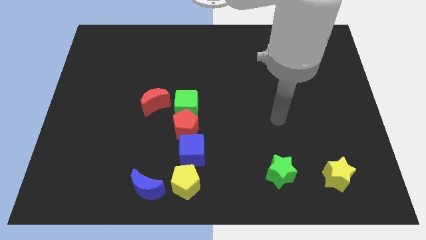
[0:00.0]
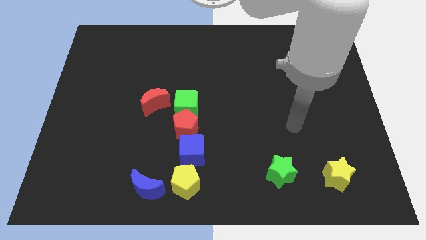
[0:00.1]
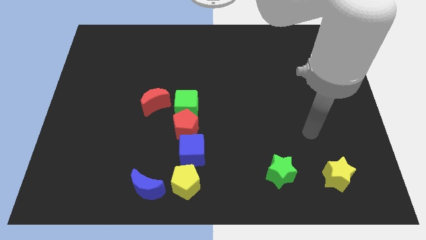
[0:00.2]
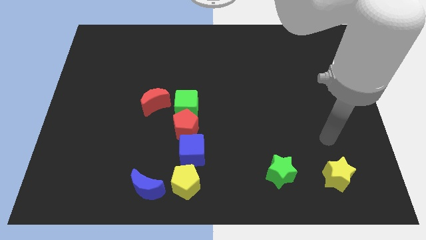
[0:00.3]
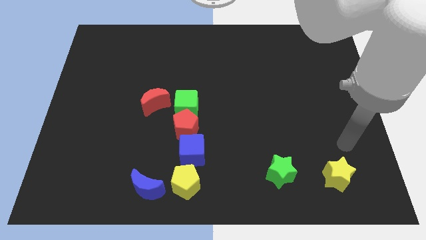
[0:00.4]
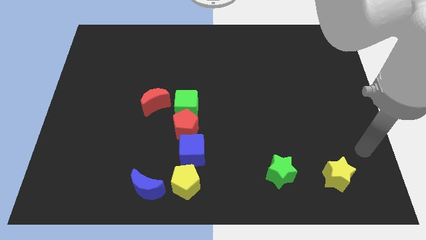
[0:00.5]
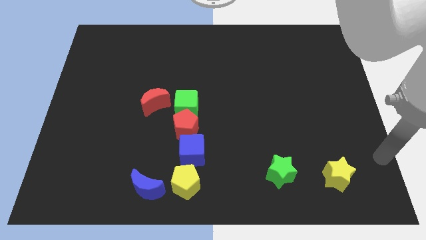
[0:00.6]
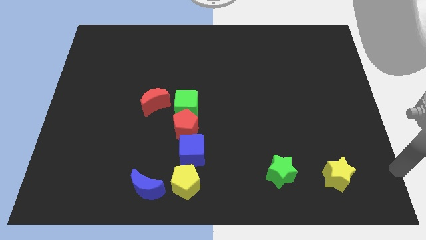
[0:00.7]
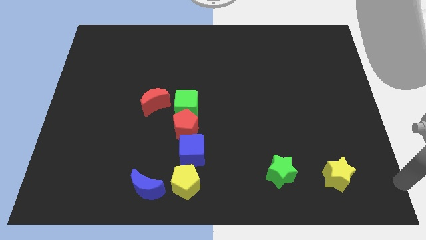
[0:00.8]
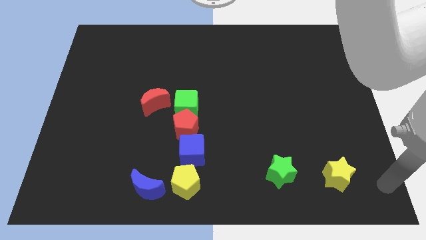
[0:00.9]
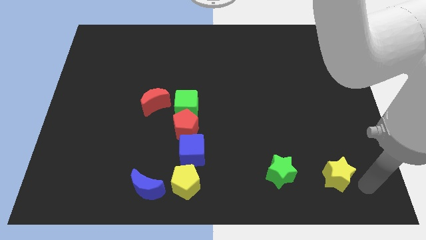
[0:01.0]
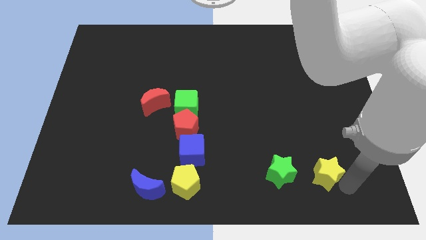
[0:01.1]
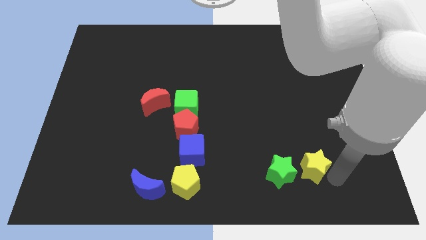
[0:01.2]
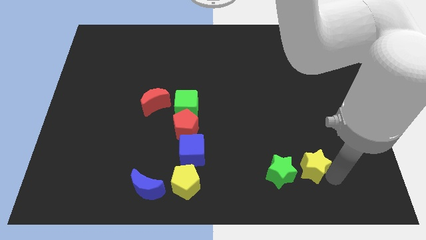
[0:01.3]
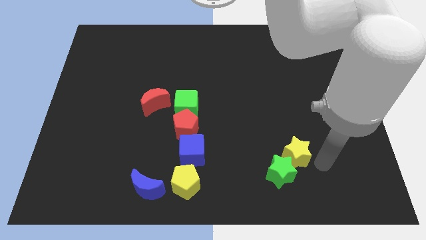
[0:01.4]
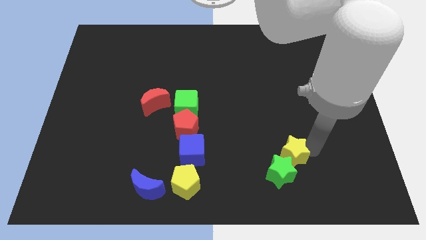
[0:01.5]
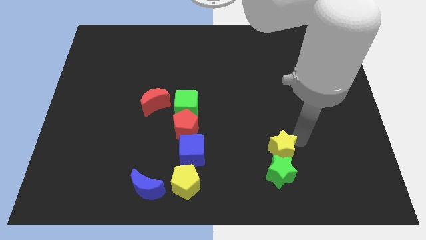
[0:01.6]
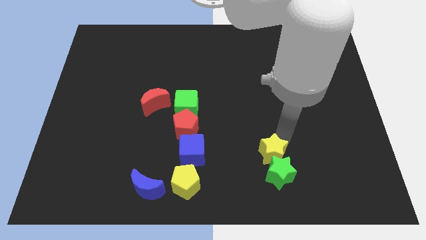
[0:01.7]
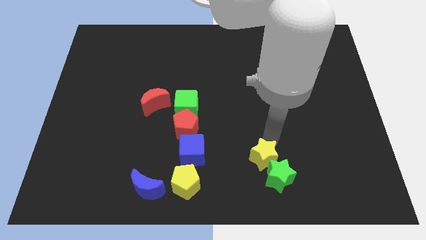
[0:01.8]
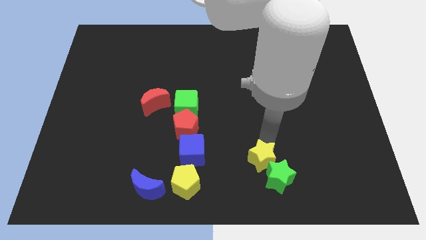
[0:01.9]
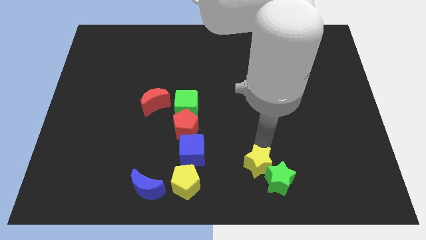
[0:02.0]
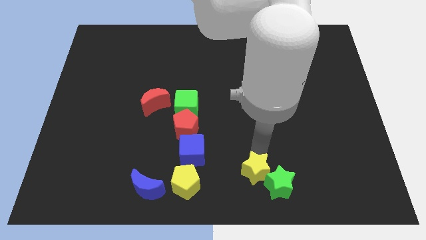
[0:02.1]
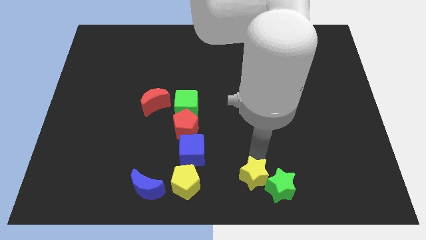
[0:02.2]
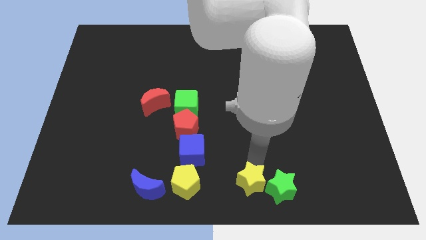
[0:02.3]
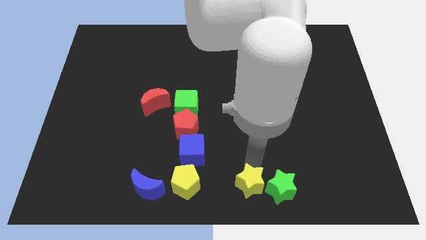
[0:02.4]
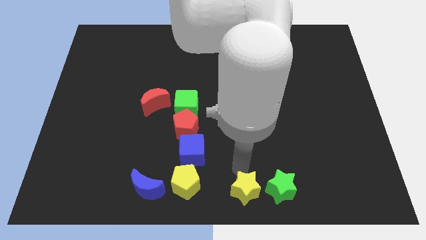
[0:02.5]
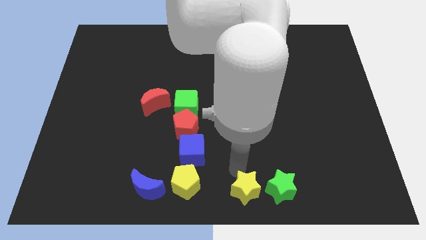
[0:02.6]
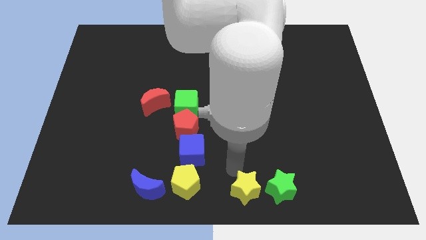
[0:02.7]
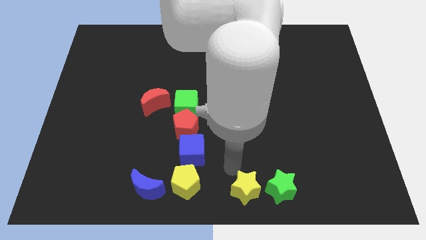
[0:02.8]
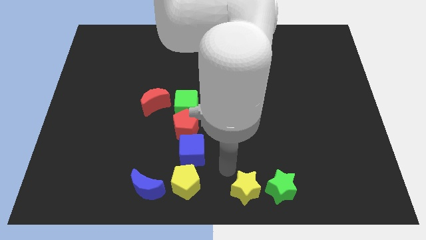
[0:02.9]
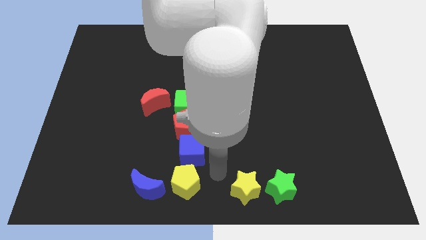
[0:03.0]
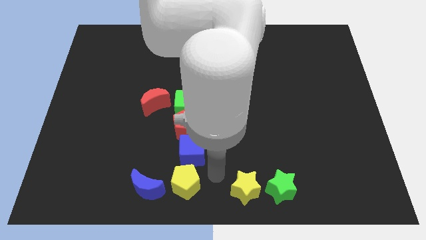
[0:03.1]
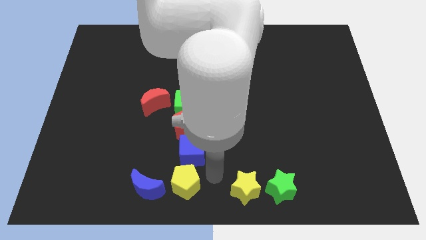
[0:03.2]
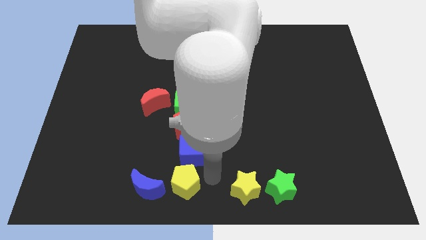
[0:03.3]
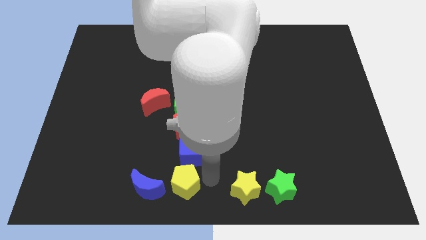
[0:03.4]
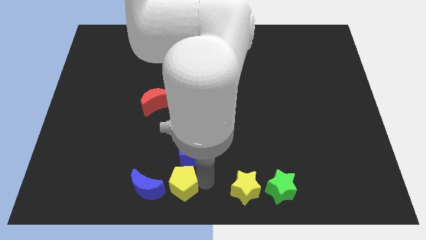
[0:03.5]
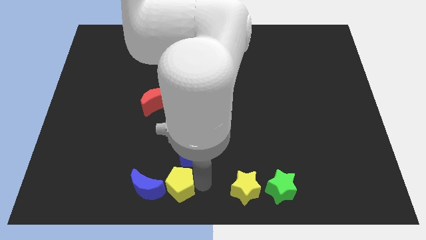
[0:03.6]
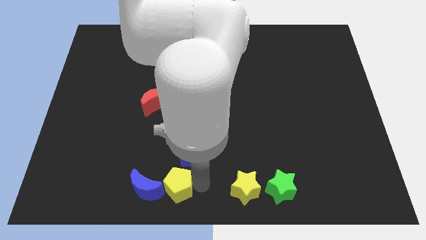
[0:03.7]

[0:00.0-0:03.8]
push yellow star beside green star

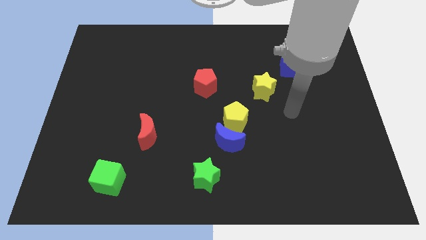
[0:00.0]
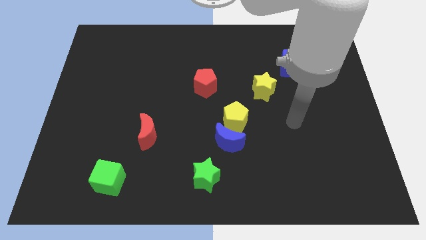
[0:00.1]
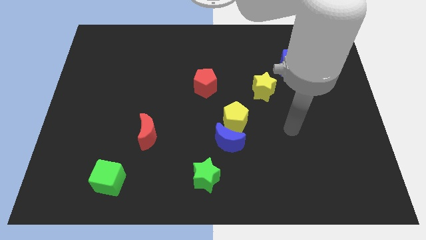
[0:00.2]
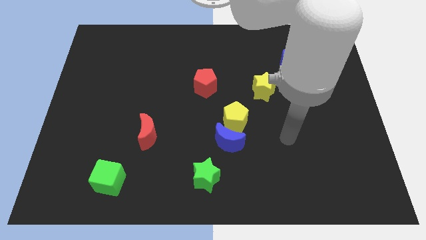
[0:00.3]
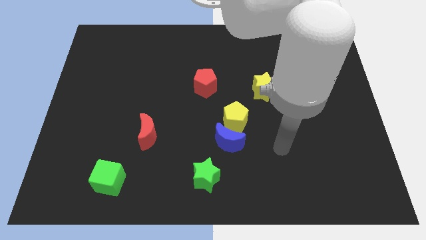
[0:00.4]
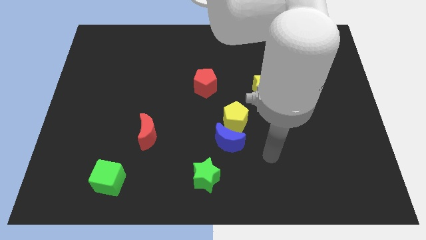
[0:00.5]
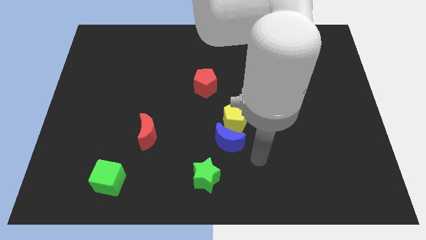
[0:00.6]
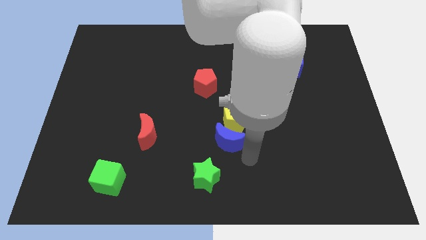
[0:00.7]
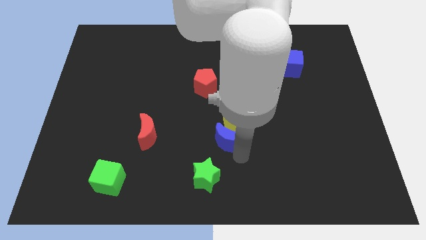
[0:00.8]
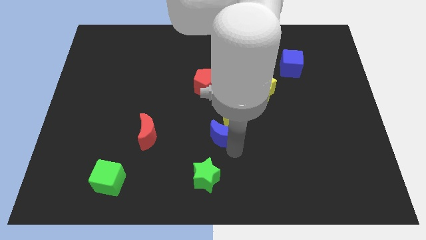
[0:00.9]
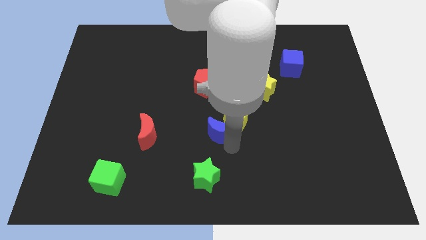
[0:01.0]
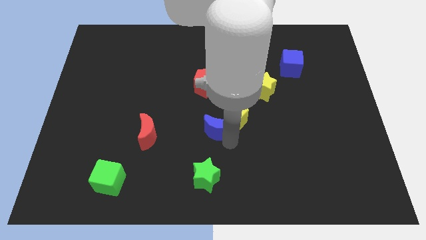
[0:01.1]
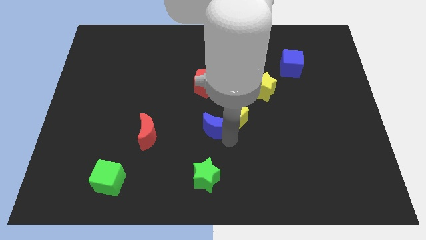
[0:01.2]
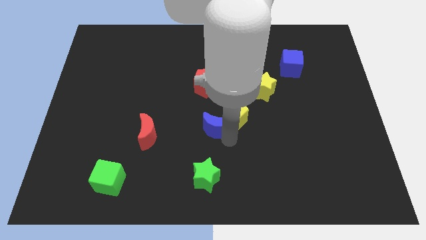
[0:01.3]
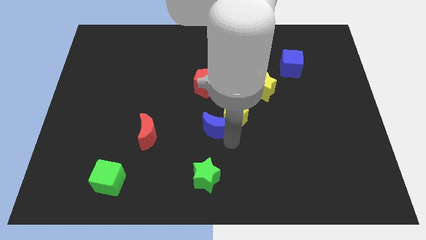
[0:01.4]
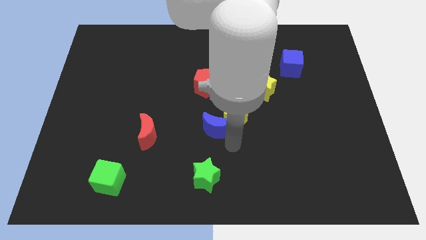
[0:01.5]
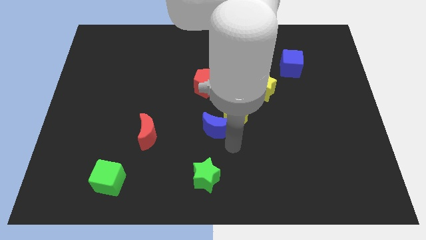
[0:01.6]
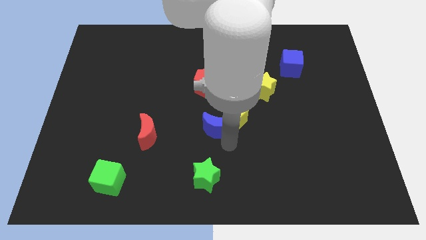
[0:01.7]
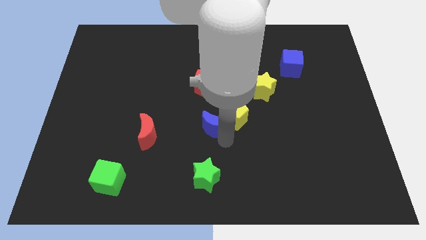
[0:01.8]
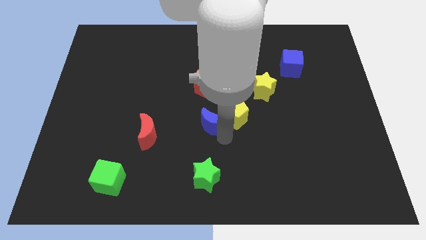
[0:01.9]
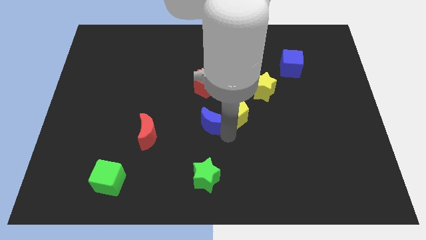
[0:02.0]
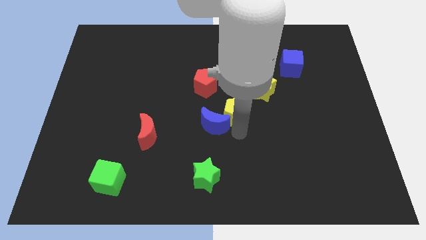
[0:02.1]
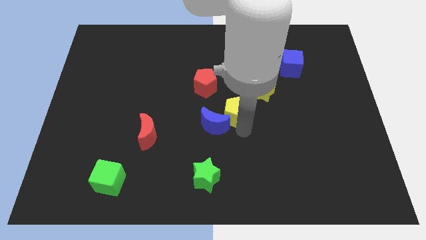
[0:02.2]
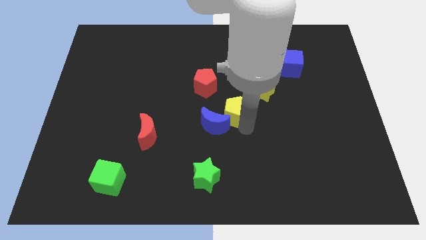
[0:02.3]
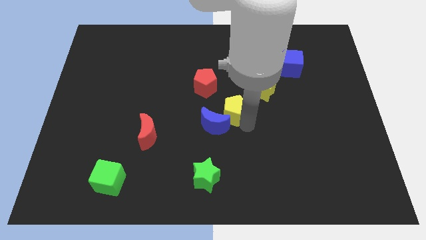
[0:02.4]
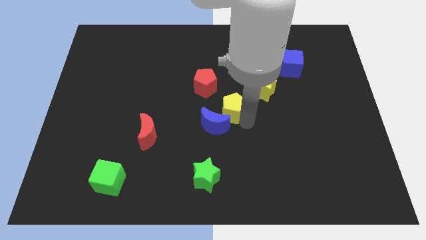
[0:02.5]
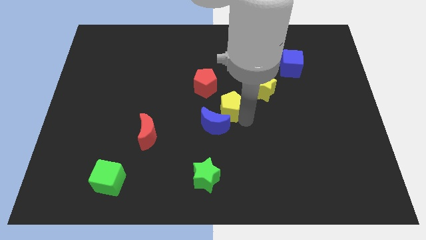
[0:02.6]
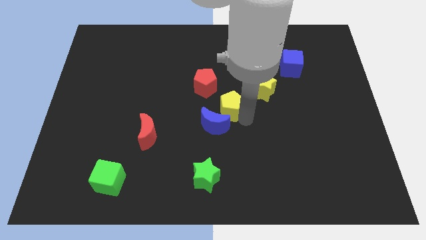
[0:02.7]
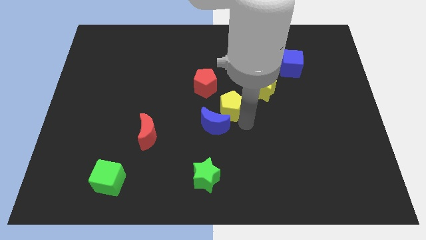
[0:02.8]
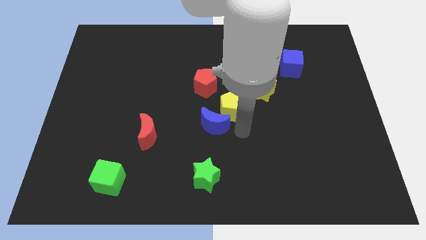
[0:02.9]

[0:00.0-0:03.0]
move the blue moon slightly to the left

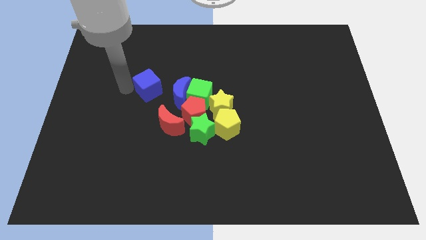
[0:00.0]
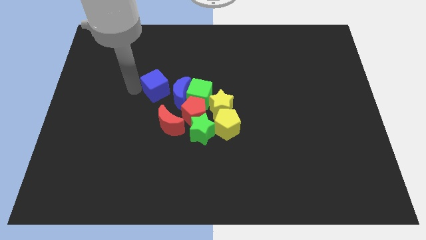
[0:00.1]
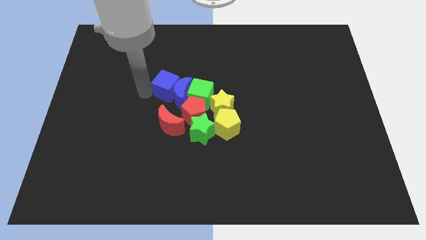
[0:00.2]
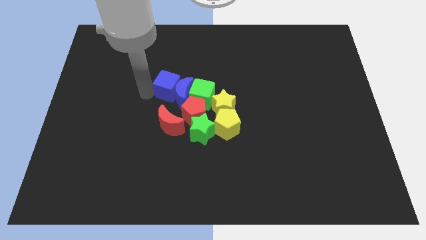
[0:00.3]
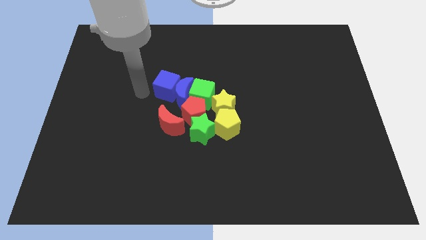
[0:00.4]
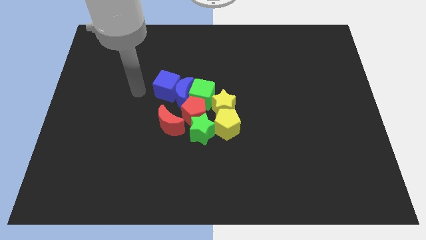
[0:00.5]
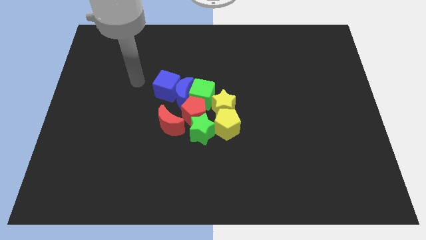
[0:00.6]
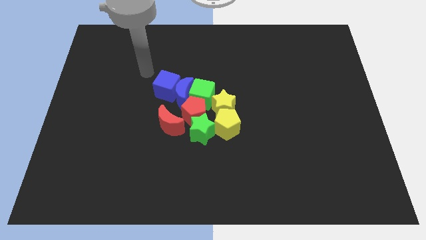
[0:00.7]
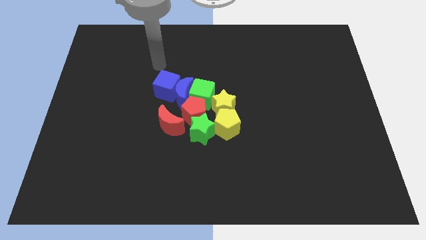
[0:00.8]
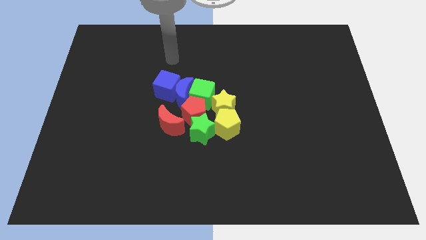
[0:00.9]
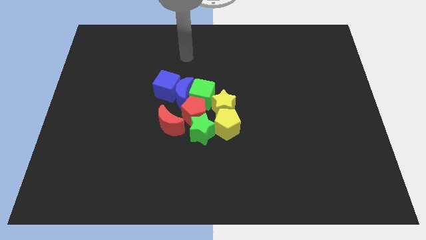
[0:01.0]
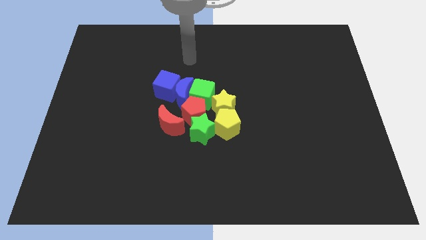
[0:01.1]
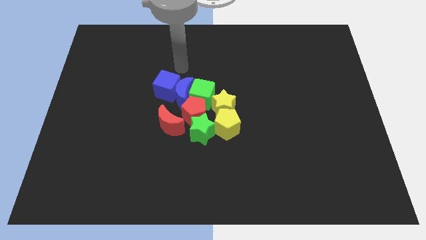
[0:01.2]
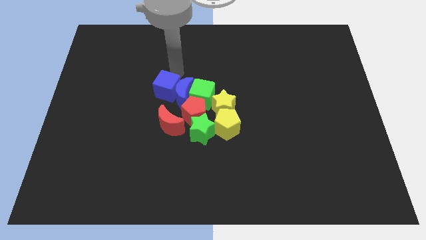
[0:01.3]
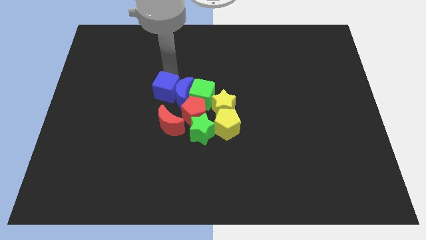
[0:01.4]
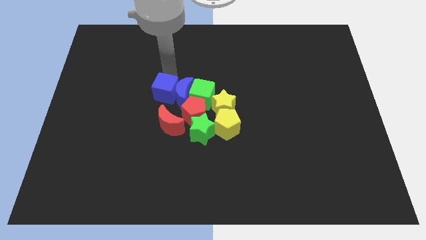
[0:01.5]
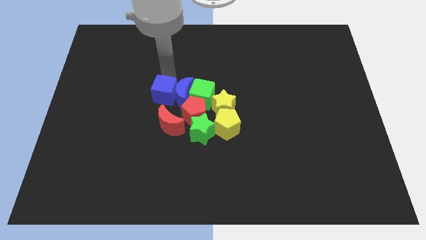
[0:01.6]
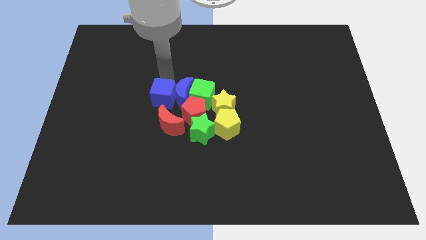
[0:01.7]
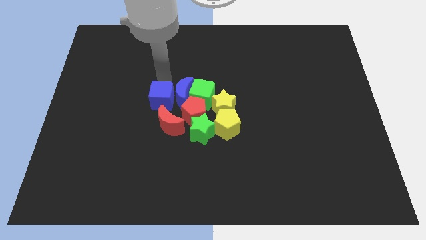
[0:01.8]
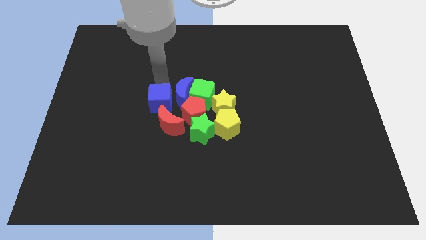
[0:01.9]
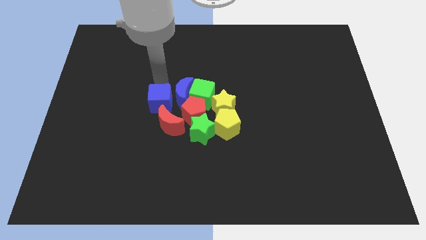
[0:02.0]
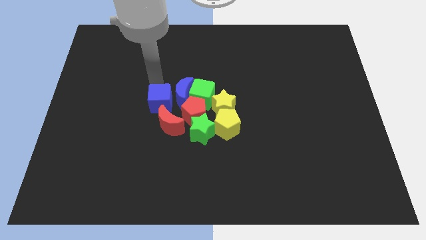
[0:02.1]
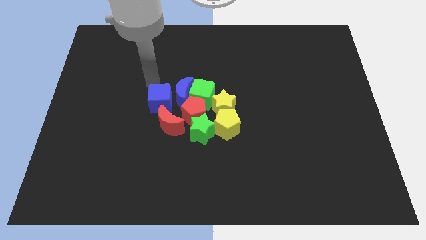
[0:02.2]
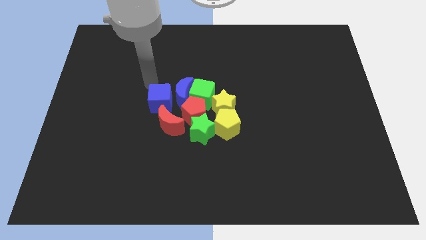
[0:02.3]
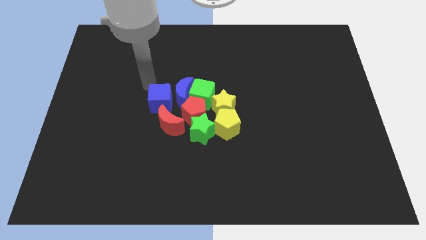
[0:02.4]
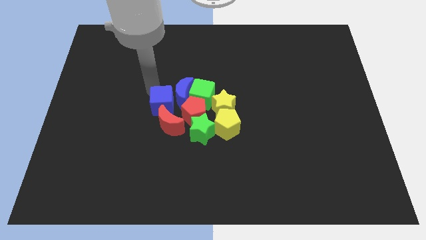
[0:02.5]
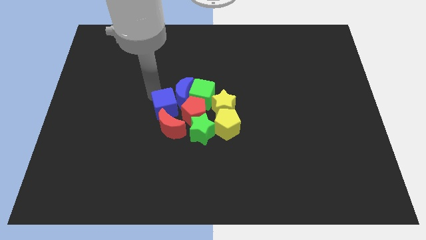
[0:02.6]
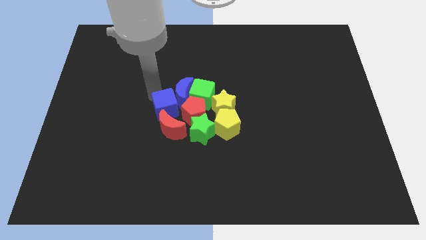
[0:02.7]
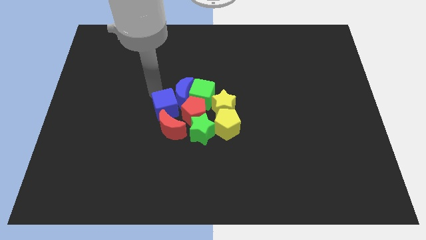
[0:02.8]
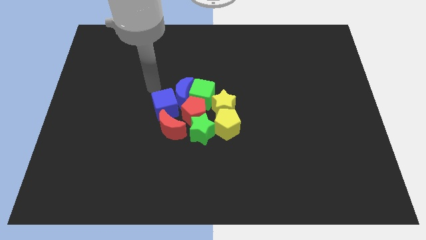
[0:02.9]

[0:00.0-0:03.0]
push the blue cube to the top of the red moon
